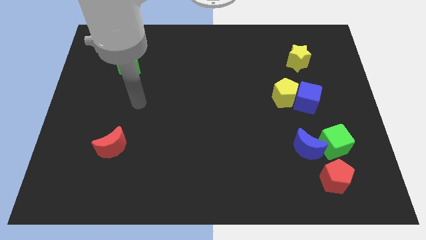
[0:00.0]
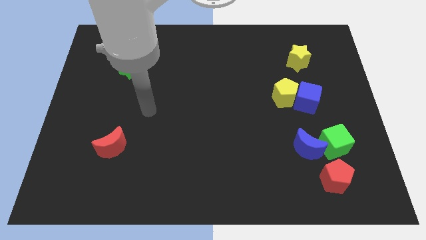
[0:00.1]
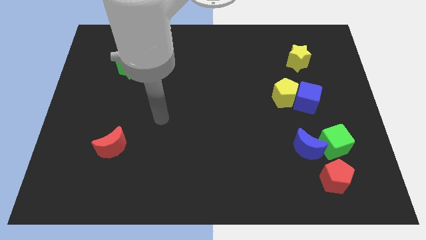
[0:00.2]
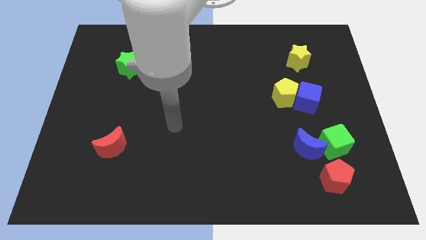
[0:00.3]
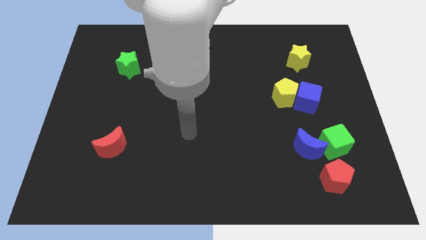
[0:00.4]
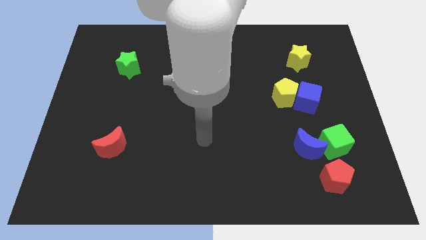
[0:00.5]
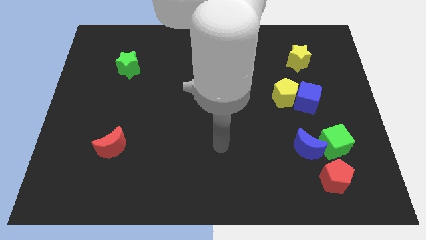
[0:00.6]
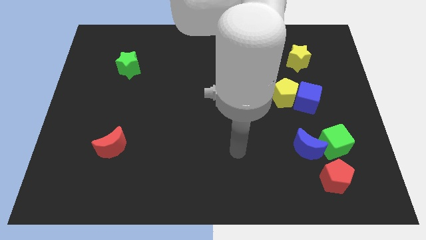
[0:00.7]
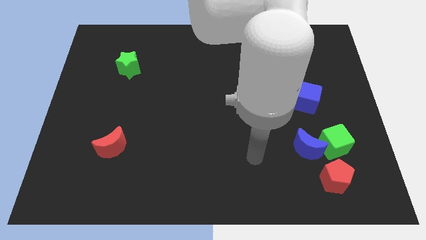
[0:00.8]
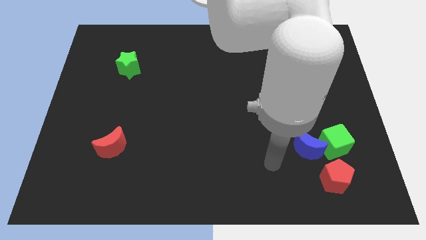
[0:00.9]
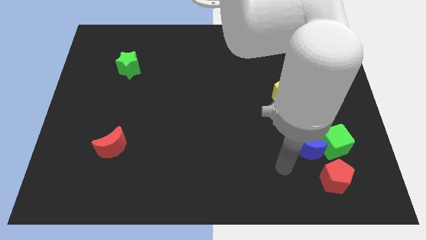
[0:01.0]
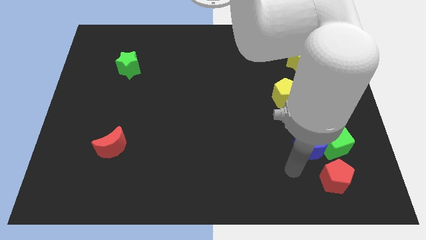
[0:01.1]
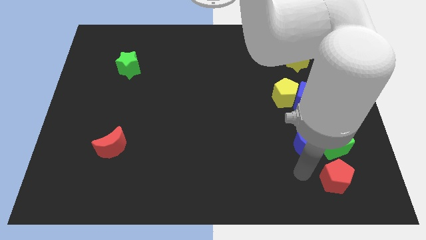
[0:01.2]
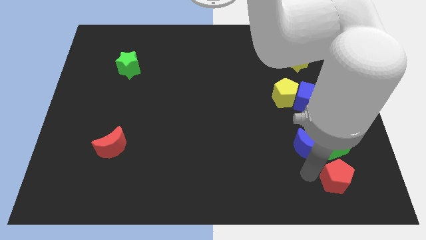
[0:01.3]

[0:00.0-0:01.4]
place the arm to the left of the red pentagon

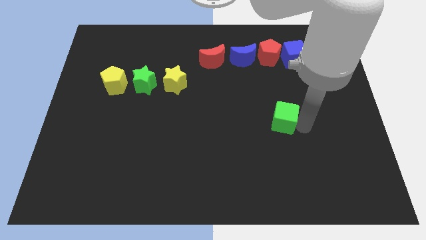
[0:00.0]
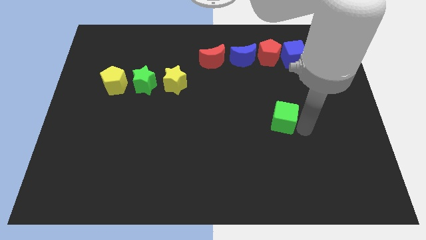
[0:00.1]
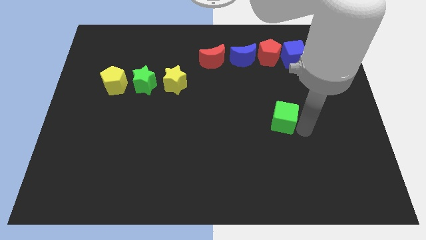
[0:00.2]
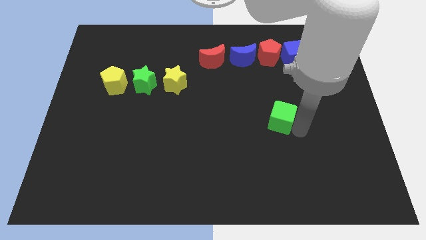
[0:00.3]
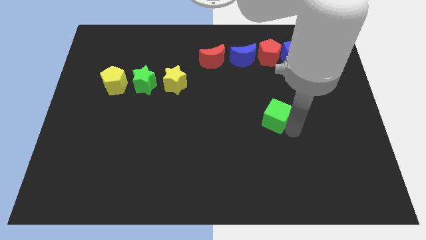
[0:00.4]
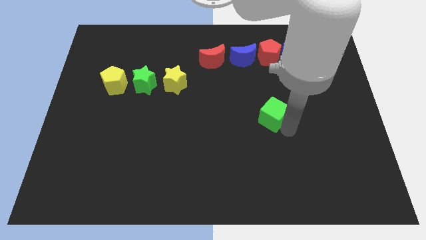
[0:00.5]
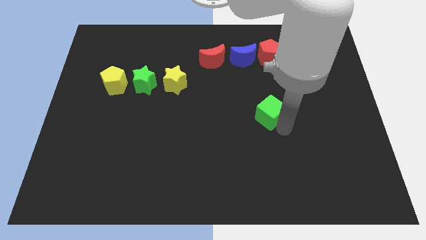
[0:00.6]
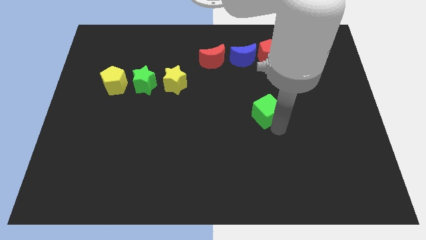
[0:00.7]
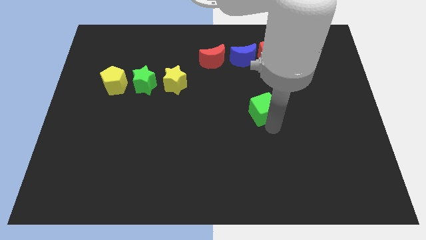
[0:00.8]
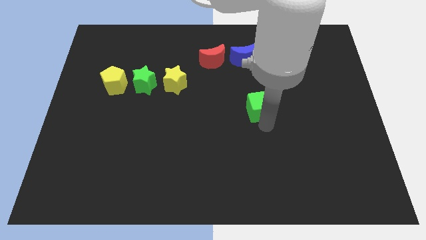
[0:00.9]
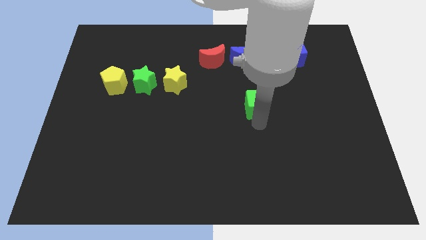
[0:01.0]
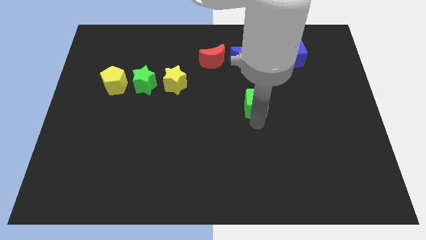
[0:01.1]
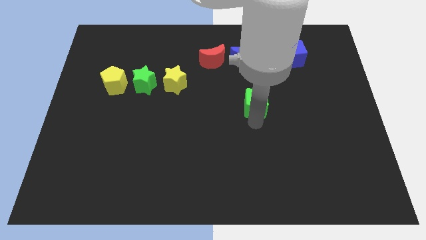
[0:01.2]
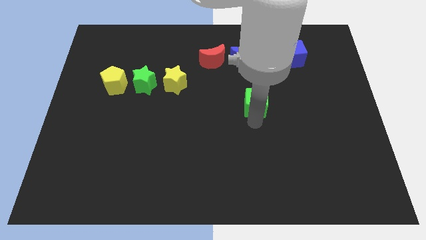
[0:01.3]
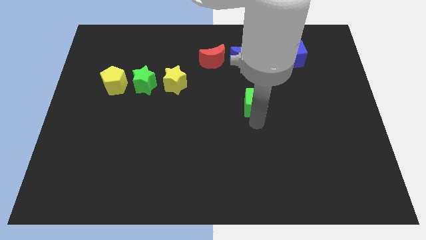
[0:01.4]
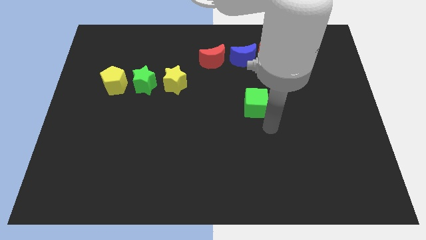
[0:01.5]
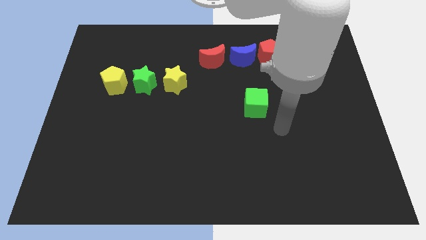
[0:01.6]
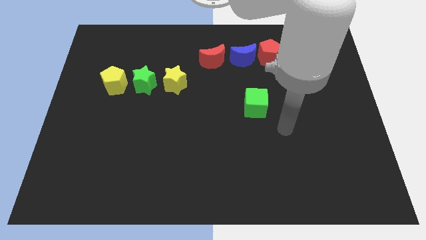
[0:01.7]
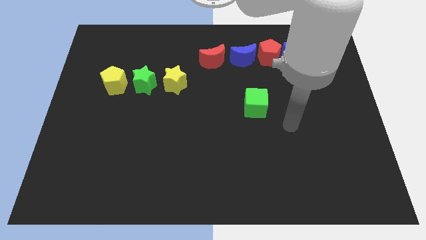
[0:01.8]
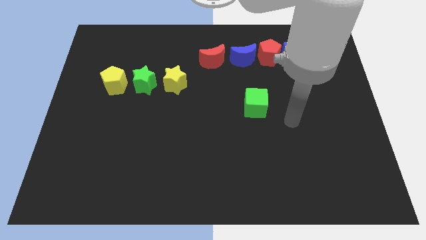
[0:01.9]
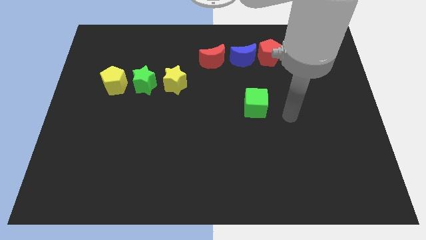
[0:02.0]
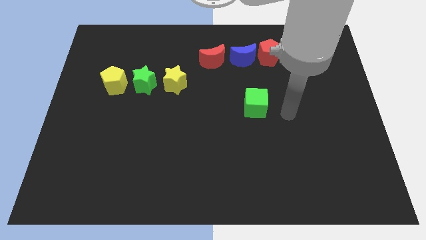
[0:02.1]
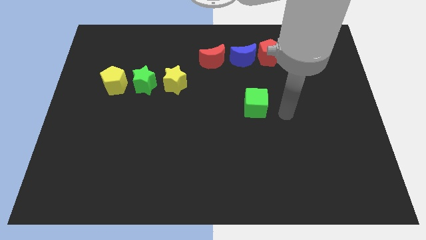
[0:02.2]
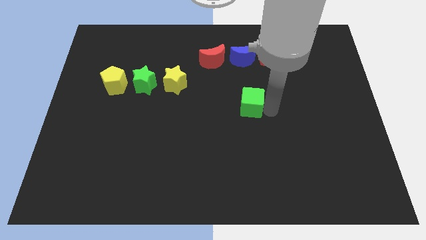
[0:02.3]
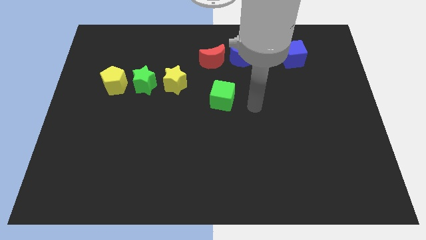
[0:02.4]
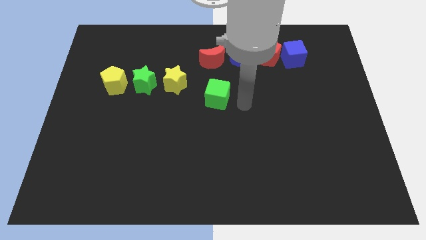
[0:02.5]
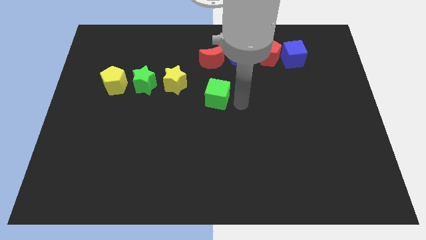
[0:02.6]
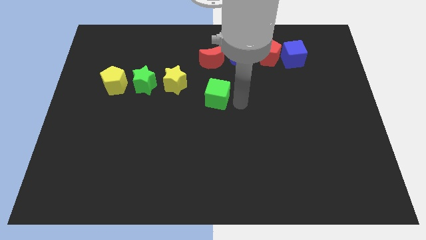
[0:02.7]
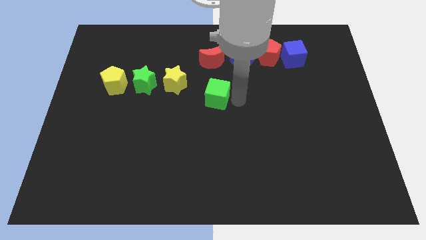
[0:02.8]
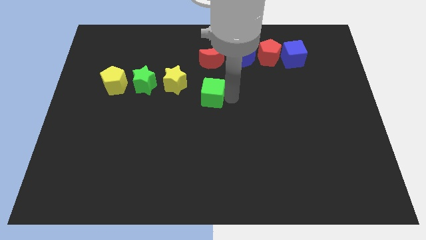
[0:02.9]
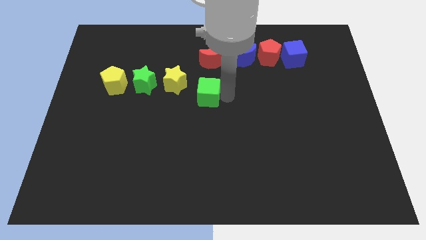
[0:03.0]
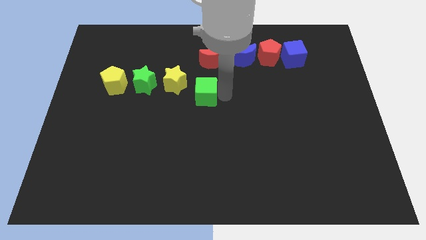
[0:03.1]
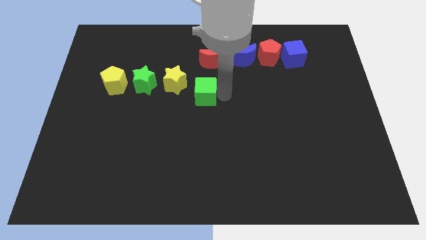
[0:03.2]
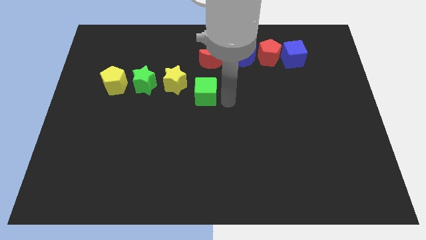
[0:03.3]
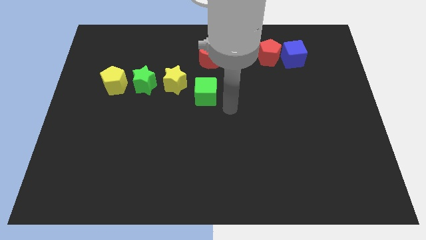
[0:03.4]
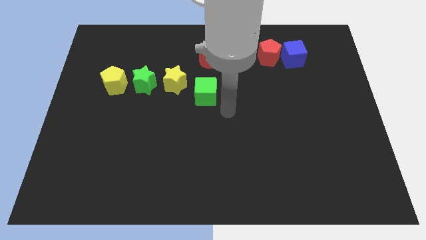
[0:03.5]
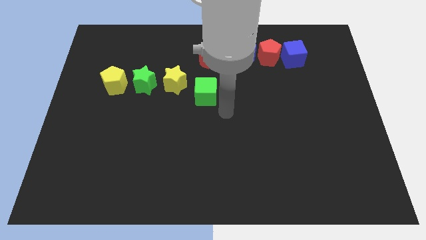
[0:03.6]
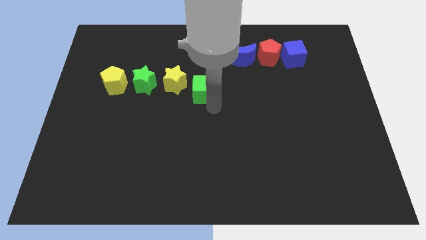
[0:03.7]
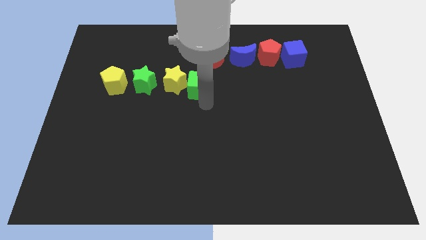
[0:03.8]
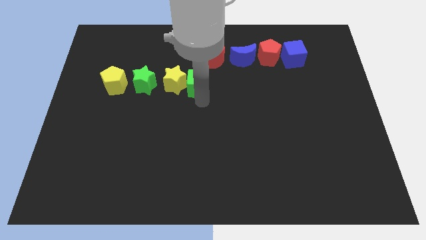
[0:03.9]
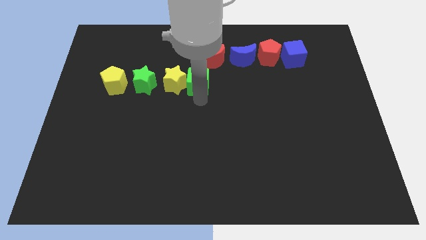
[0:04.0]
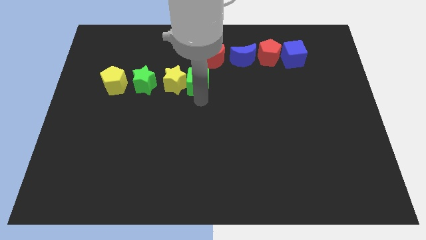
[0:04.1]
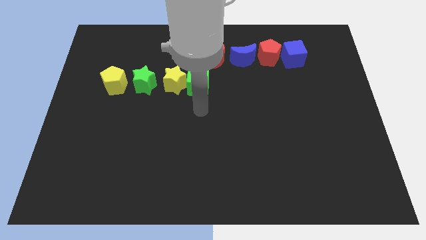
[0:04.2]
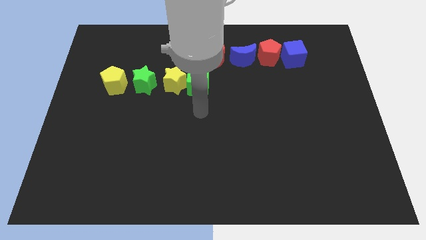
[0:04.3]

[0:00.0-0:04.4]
move the green cube to the right of the yellow star

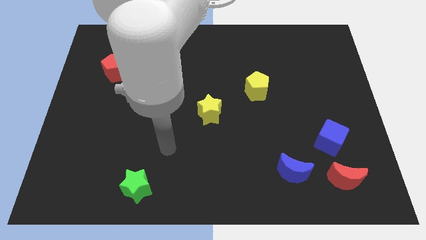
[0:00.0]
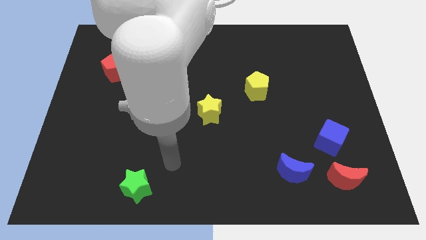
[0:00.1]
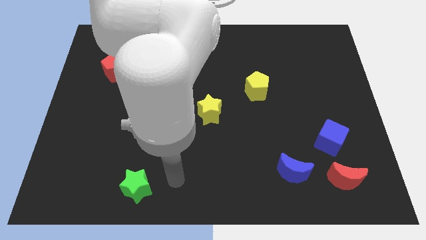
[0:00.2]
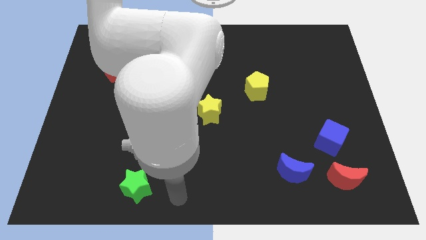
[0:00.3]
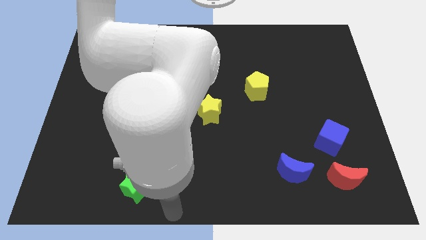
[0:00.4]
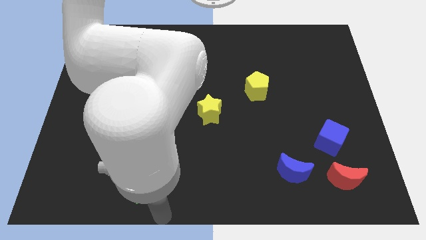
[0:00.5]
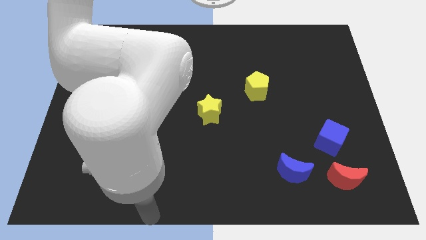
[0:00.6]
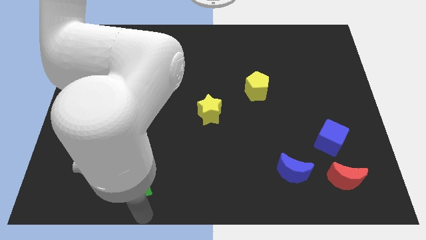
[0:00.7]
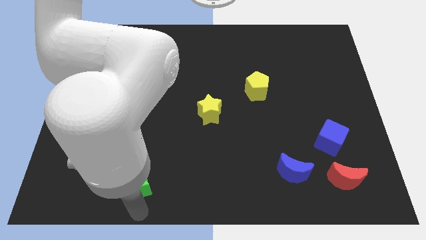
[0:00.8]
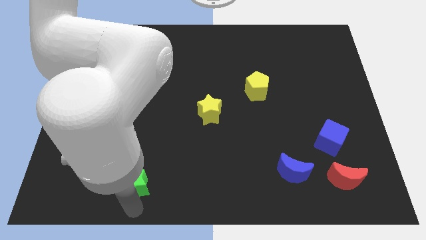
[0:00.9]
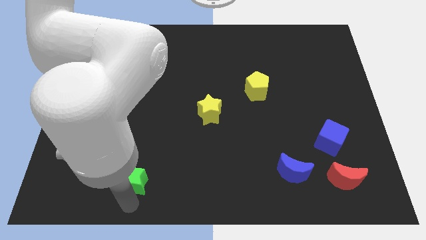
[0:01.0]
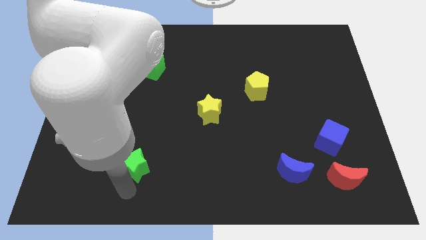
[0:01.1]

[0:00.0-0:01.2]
tap the bottom side of the green star

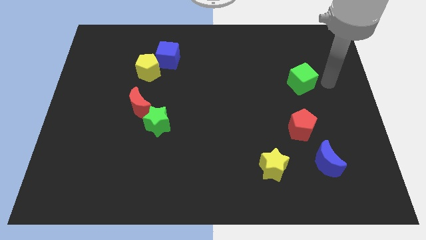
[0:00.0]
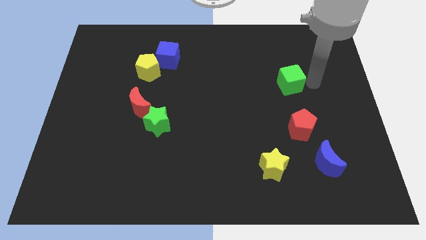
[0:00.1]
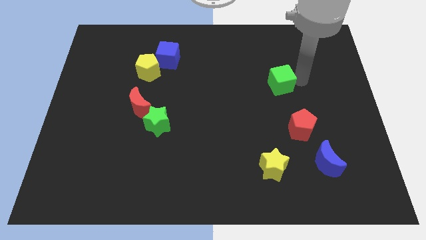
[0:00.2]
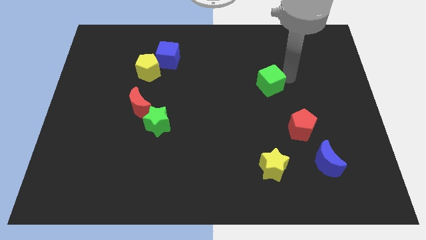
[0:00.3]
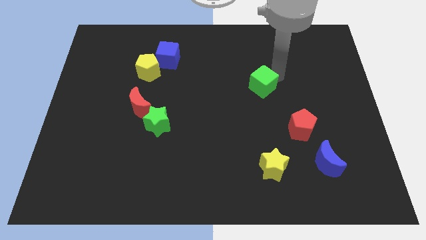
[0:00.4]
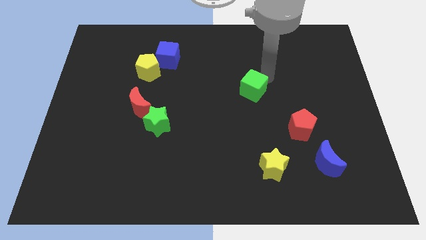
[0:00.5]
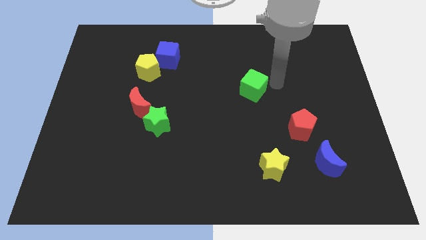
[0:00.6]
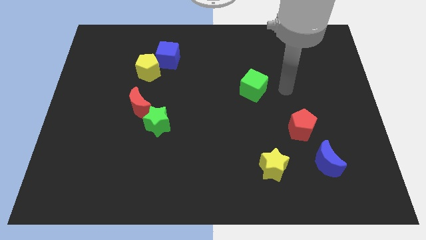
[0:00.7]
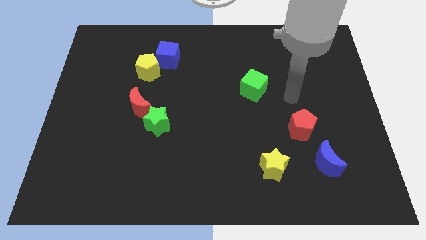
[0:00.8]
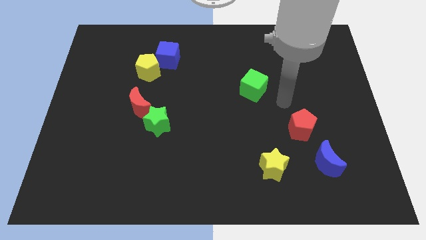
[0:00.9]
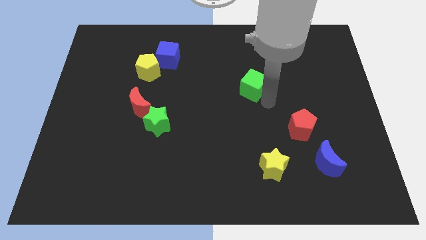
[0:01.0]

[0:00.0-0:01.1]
place the green cube vertically above the yellow star

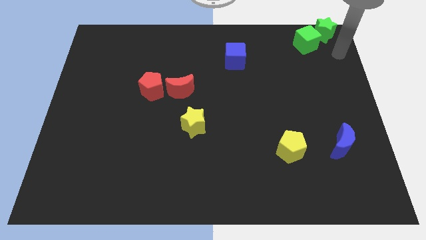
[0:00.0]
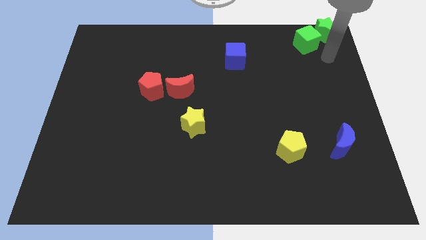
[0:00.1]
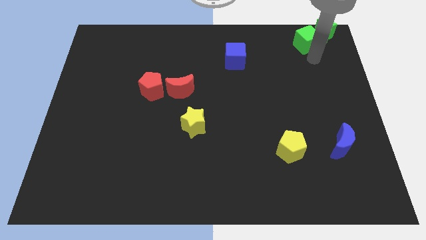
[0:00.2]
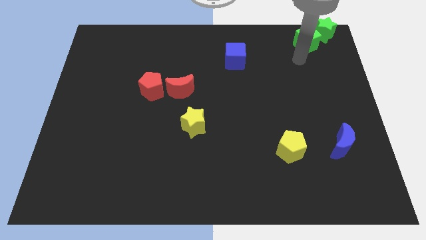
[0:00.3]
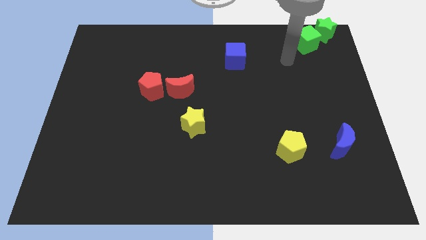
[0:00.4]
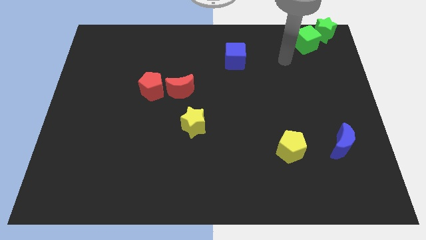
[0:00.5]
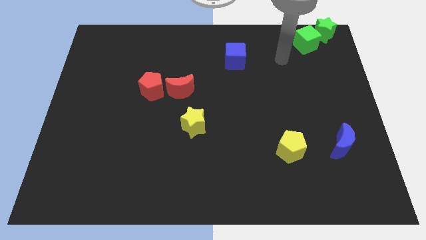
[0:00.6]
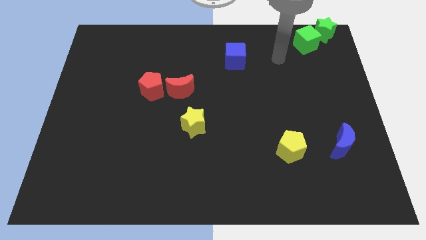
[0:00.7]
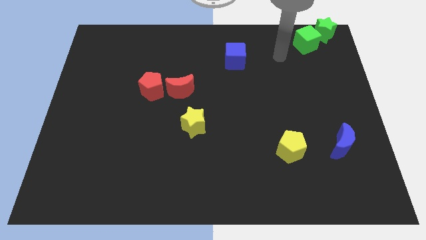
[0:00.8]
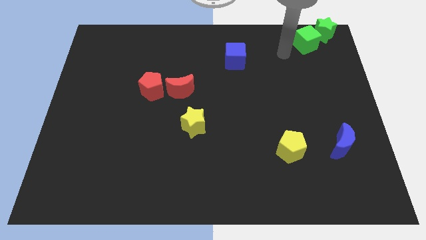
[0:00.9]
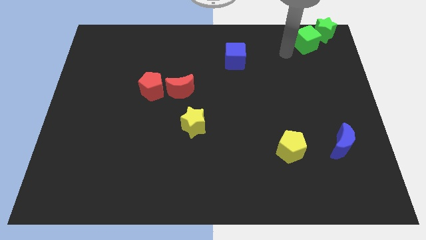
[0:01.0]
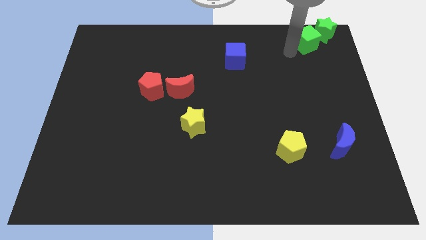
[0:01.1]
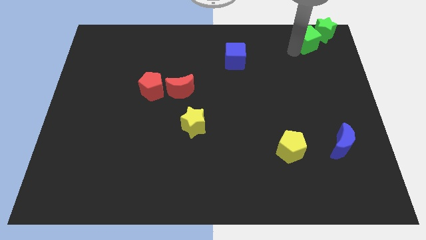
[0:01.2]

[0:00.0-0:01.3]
place your arm to the bottom side of the green cube
